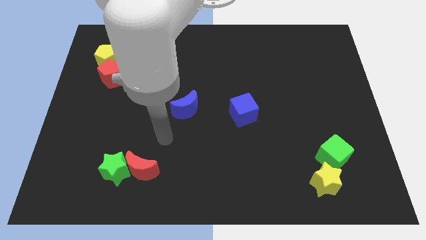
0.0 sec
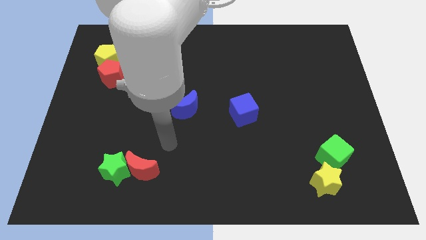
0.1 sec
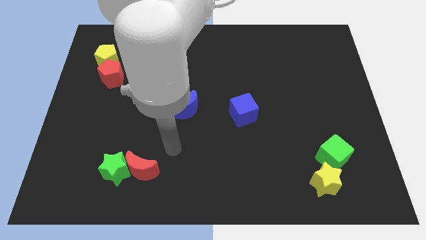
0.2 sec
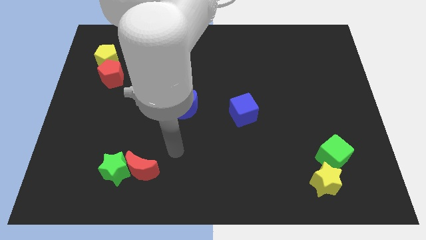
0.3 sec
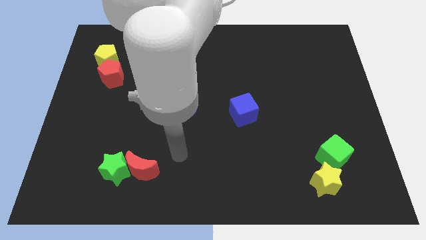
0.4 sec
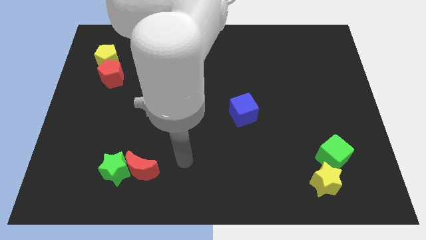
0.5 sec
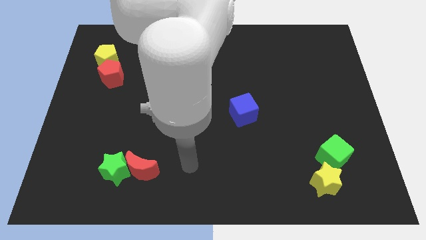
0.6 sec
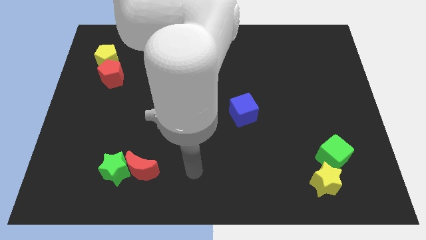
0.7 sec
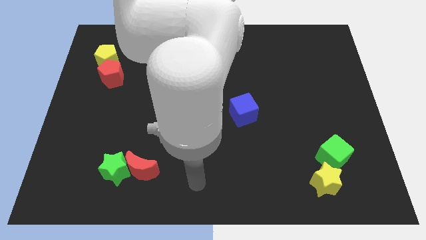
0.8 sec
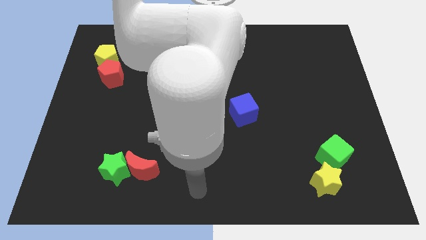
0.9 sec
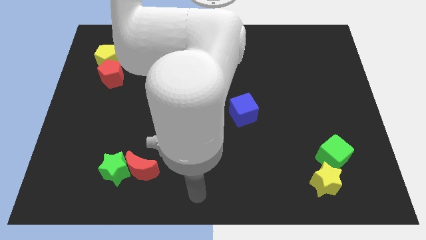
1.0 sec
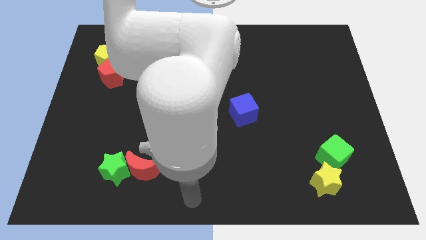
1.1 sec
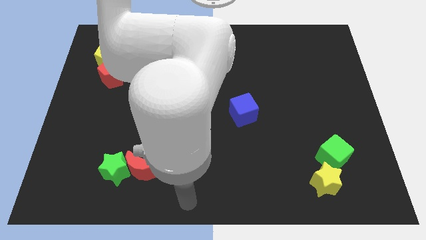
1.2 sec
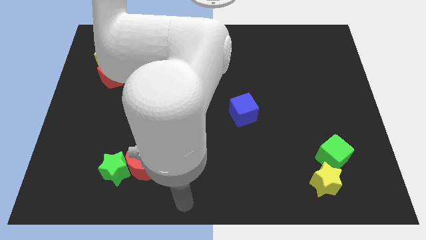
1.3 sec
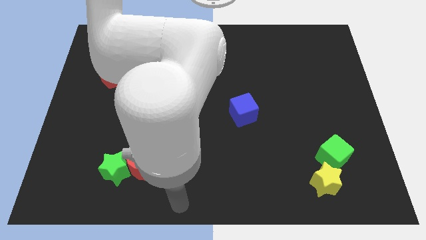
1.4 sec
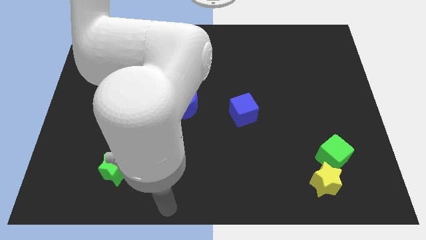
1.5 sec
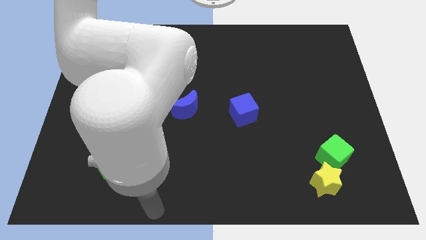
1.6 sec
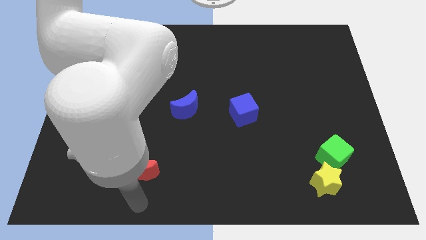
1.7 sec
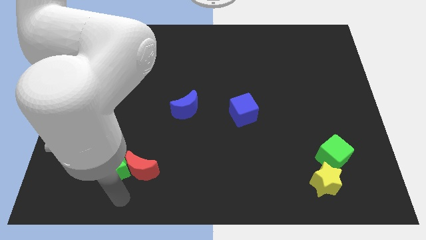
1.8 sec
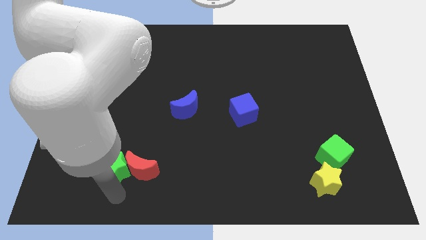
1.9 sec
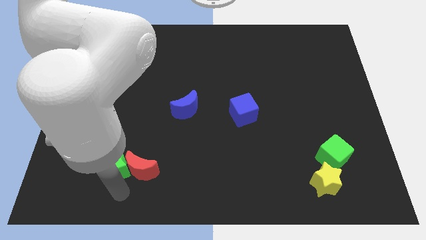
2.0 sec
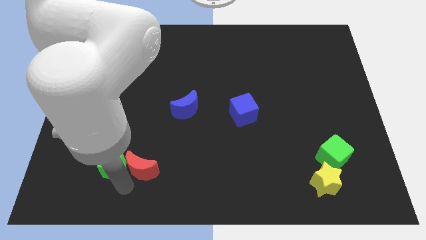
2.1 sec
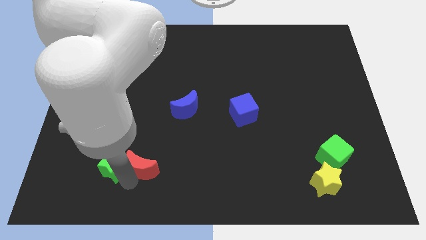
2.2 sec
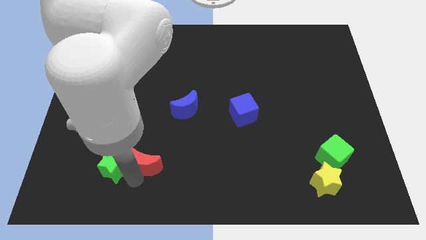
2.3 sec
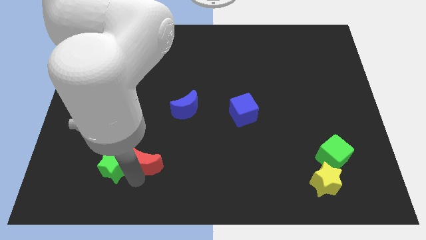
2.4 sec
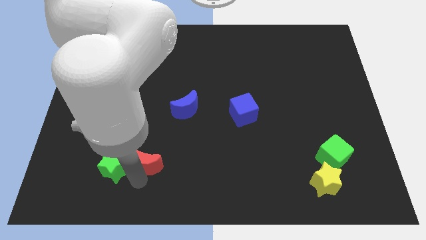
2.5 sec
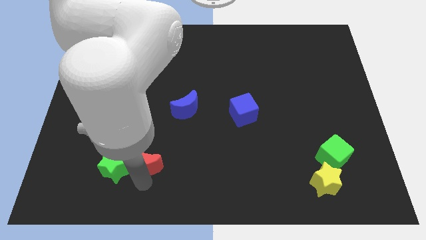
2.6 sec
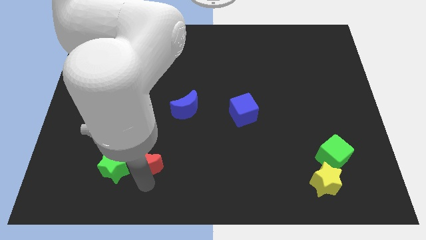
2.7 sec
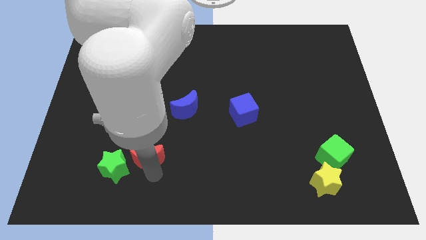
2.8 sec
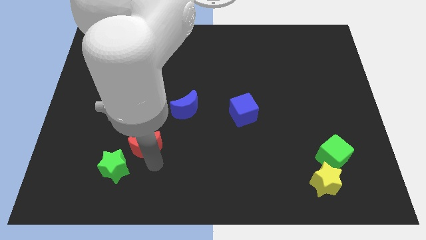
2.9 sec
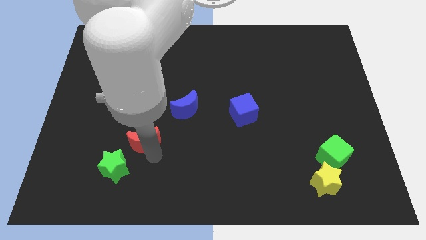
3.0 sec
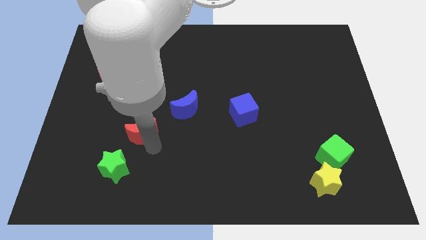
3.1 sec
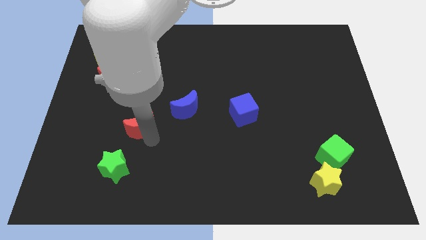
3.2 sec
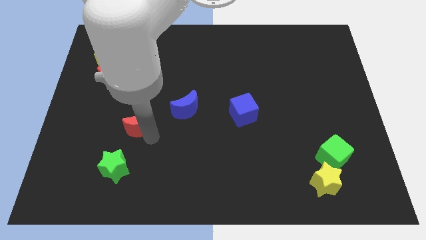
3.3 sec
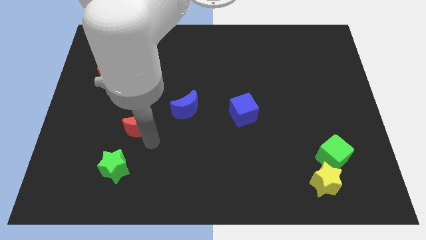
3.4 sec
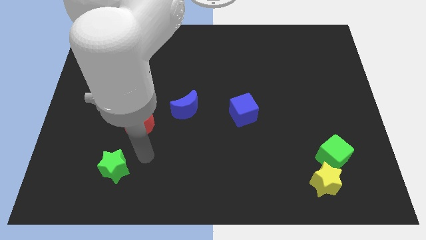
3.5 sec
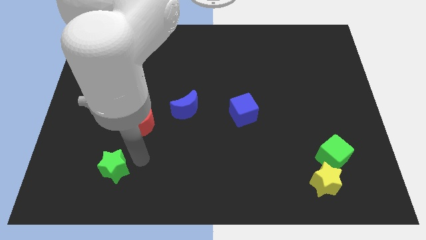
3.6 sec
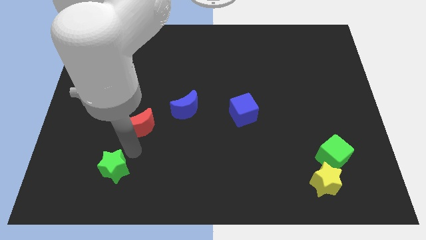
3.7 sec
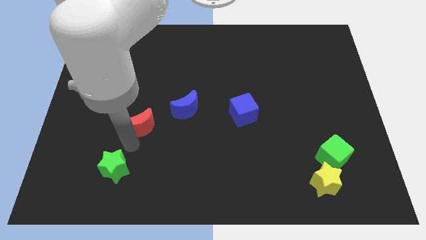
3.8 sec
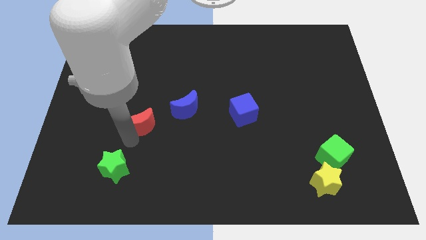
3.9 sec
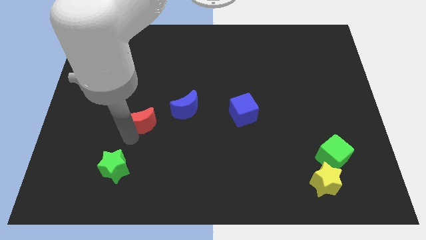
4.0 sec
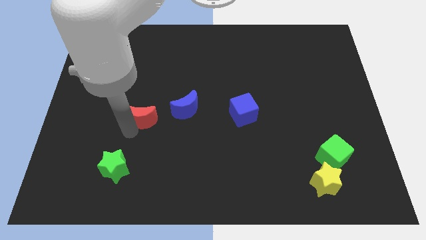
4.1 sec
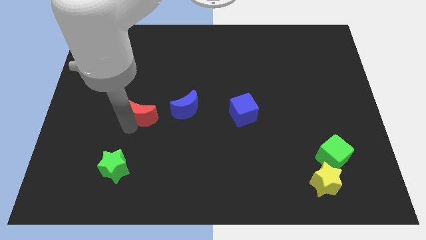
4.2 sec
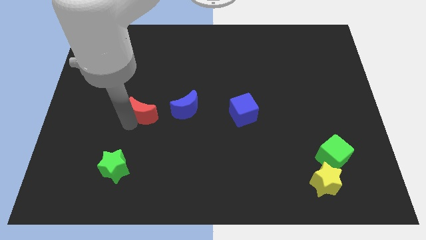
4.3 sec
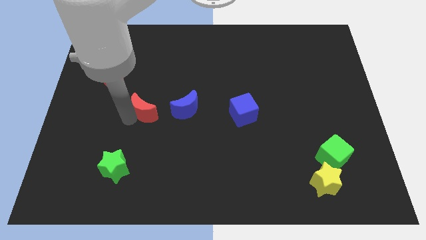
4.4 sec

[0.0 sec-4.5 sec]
move the red moon left to the blue moon

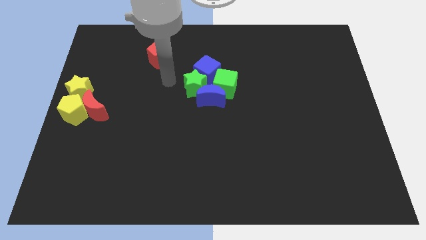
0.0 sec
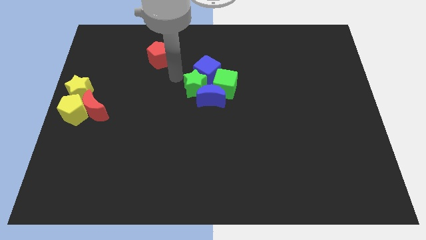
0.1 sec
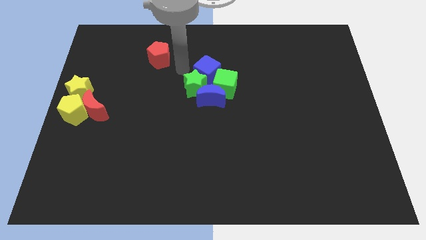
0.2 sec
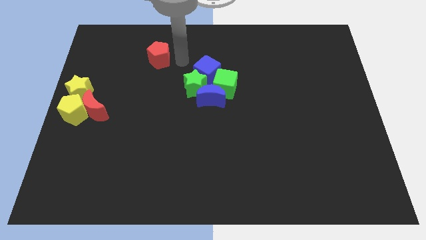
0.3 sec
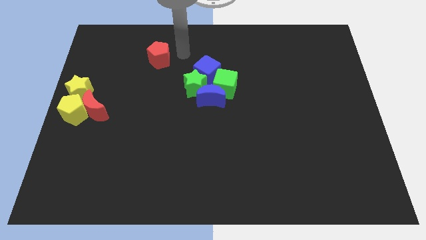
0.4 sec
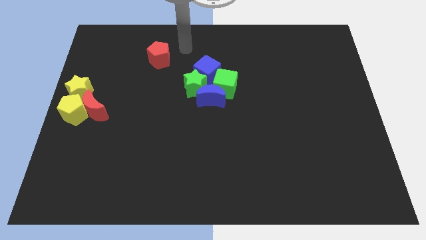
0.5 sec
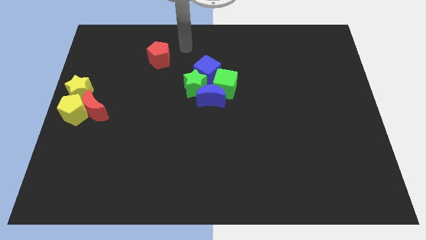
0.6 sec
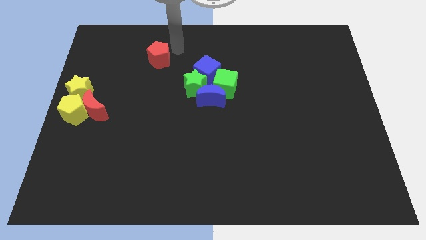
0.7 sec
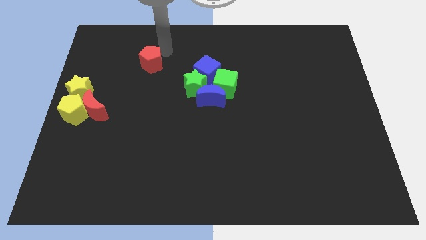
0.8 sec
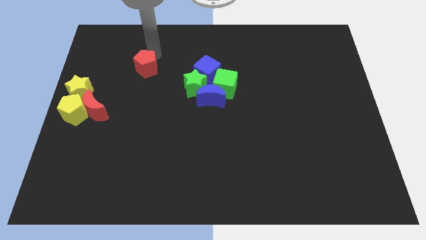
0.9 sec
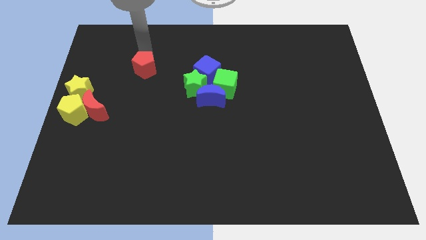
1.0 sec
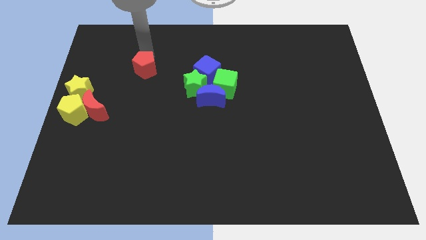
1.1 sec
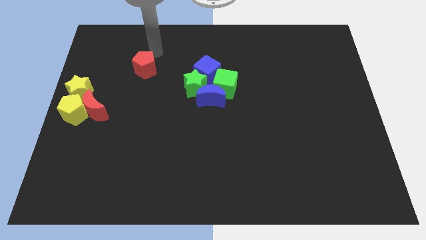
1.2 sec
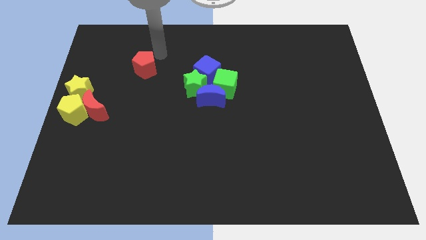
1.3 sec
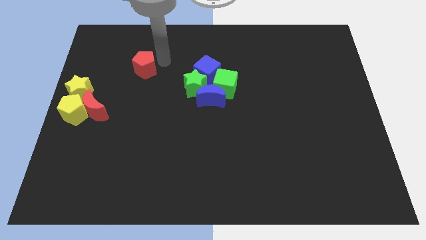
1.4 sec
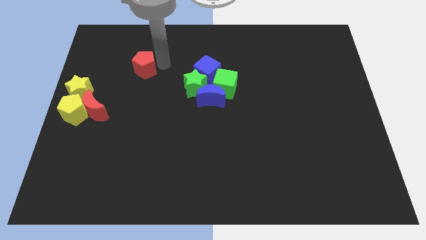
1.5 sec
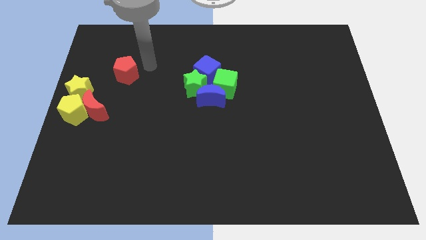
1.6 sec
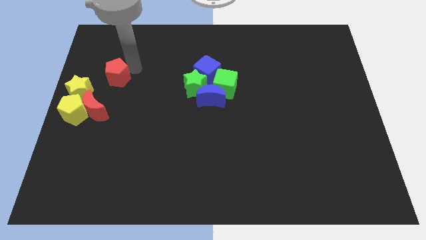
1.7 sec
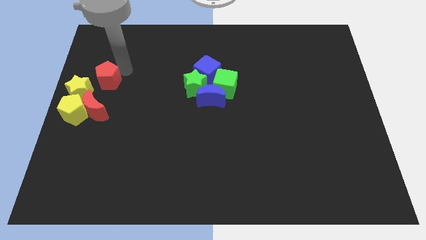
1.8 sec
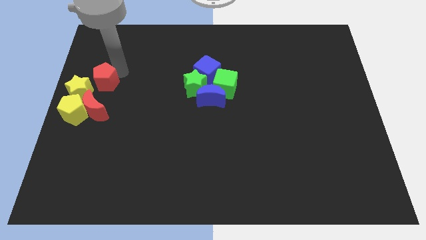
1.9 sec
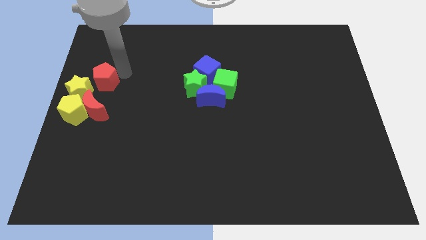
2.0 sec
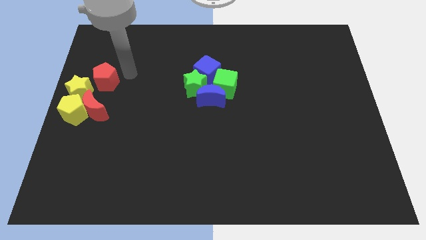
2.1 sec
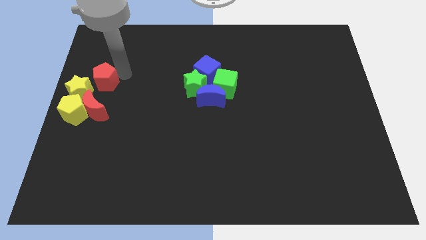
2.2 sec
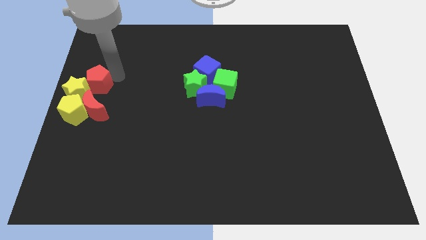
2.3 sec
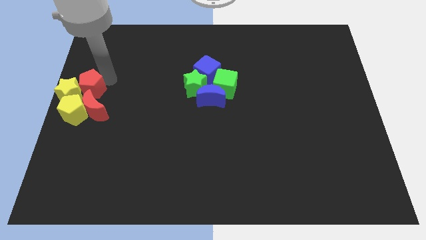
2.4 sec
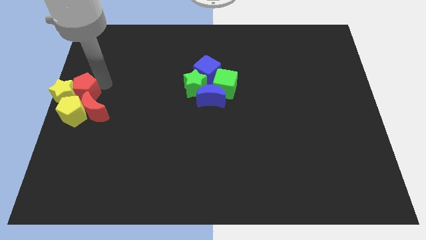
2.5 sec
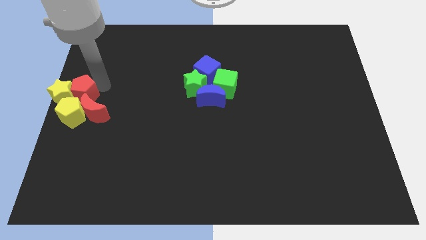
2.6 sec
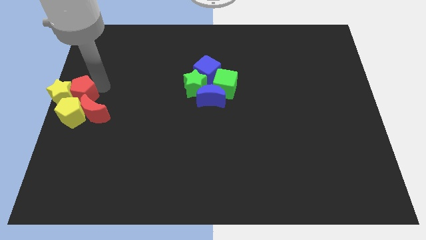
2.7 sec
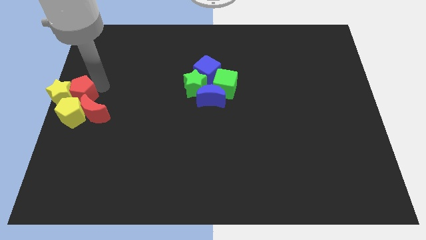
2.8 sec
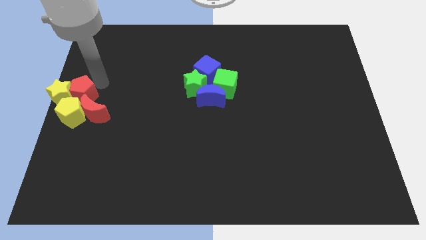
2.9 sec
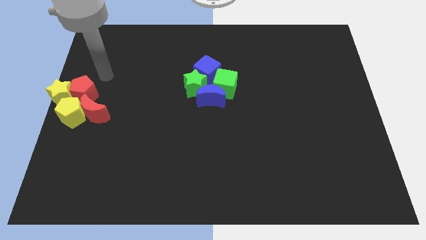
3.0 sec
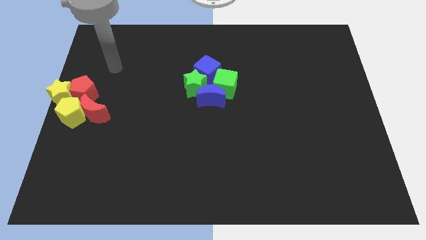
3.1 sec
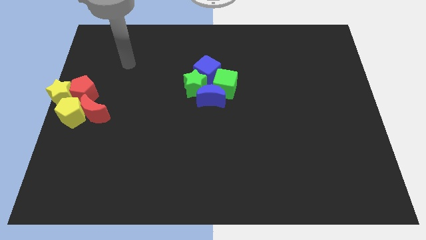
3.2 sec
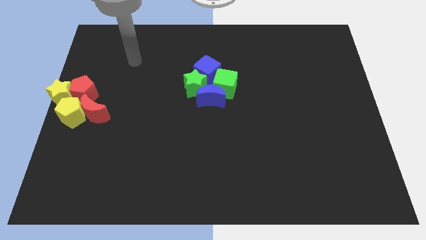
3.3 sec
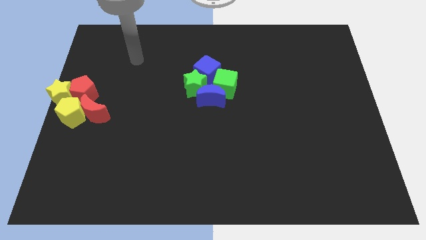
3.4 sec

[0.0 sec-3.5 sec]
place the red pentagon right to the yellow star

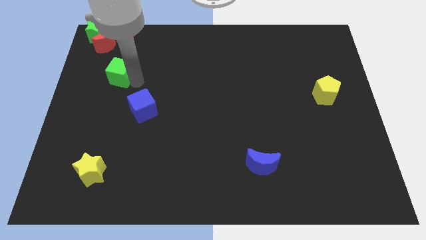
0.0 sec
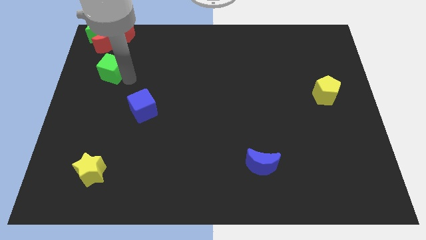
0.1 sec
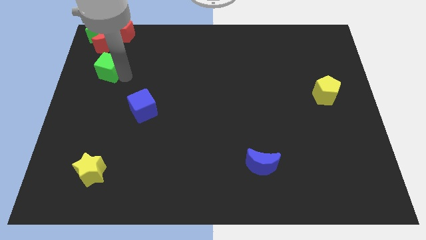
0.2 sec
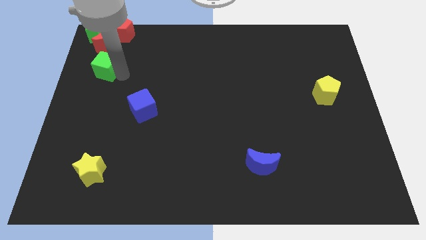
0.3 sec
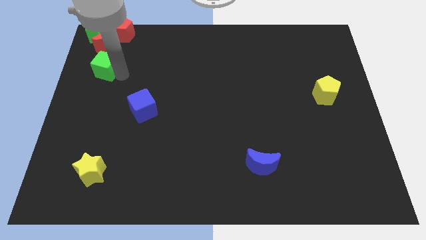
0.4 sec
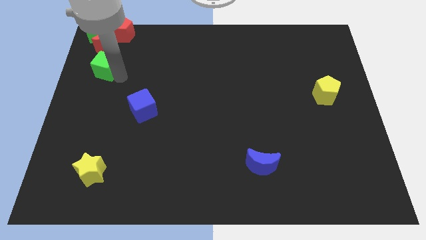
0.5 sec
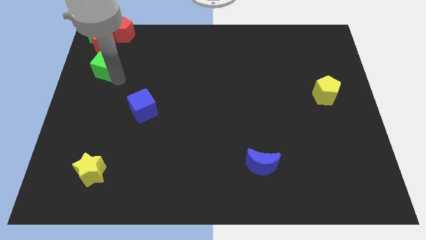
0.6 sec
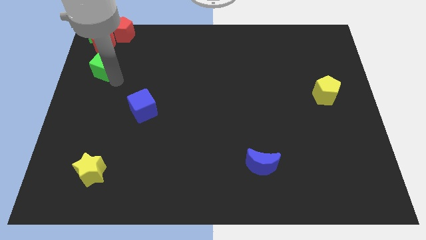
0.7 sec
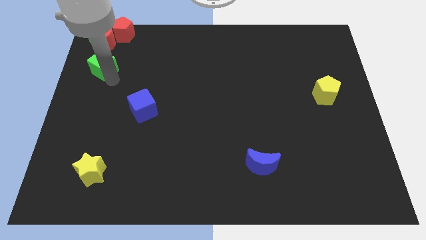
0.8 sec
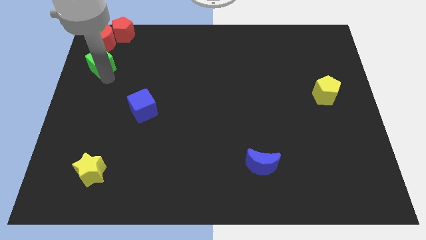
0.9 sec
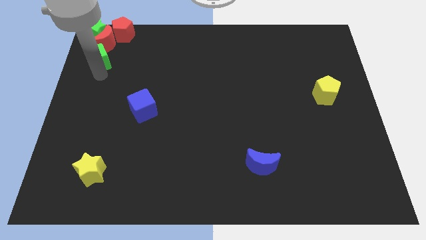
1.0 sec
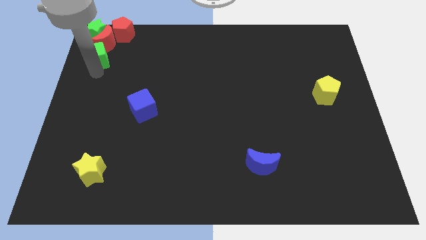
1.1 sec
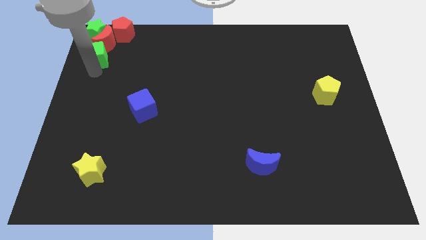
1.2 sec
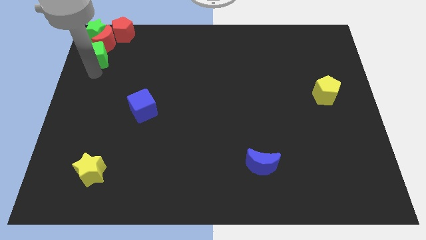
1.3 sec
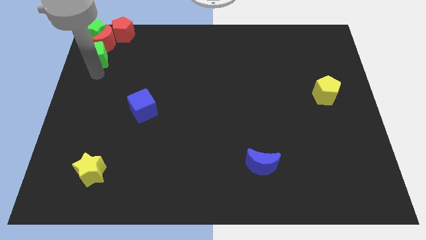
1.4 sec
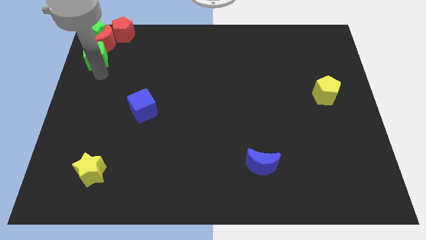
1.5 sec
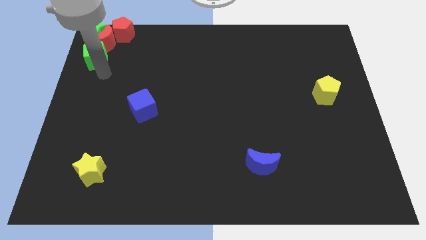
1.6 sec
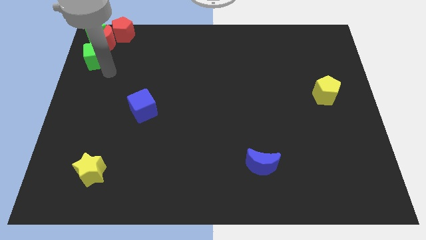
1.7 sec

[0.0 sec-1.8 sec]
place green cube below red moon
